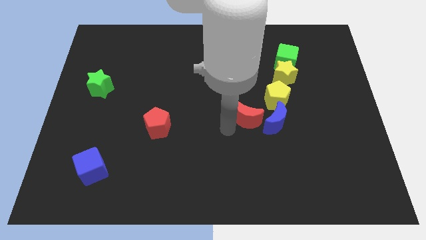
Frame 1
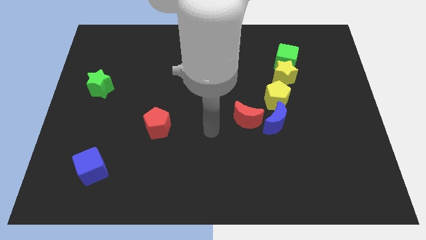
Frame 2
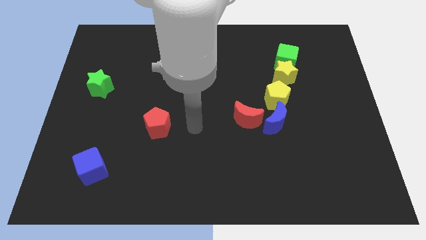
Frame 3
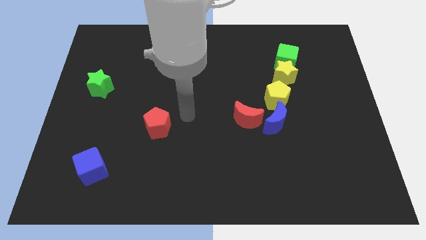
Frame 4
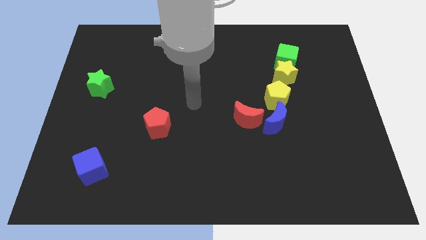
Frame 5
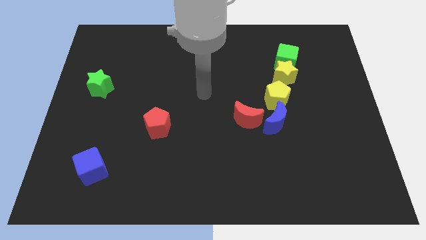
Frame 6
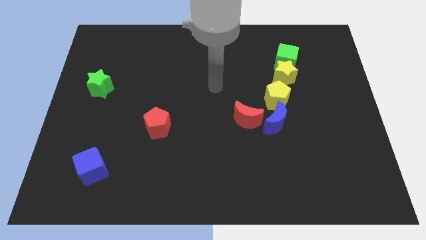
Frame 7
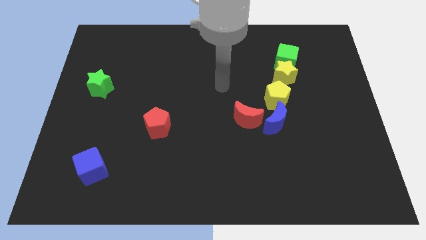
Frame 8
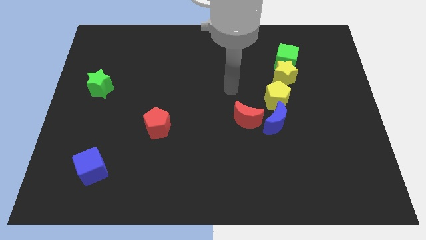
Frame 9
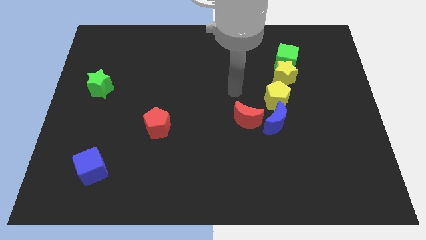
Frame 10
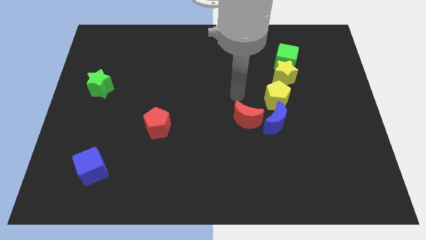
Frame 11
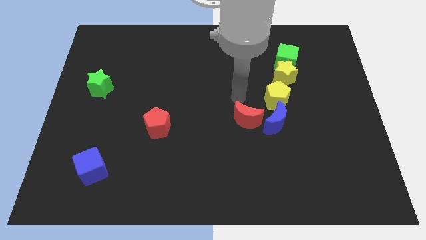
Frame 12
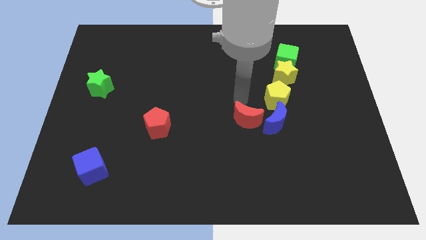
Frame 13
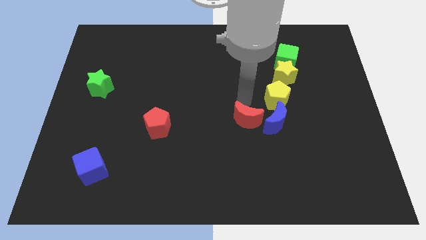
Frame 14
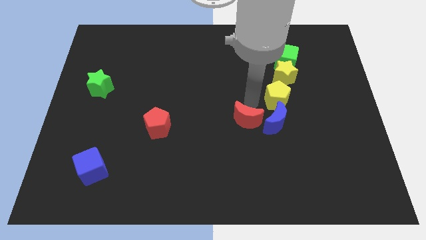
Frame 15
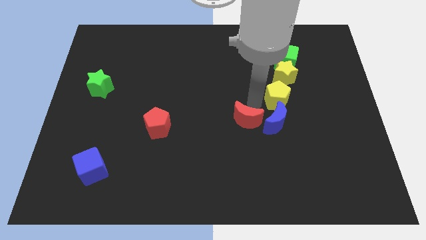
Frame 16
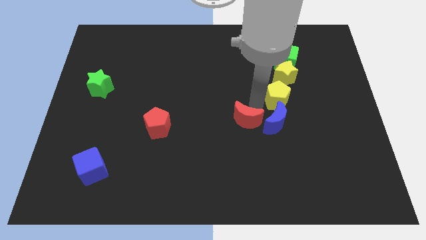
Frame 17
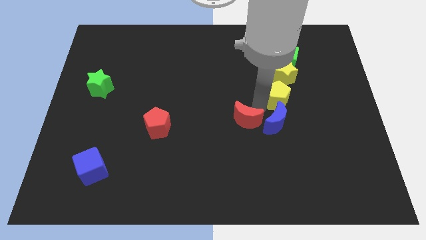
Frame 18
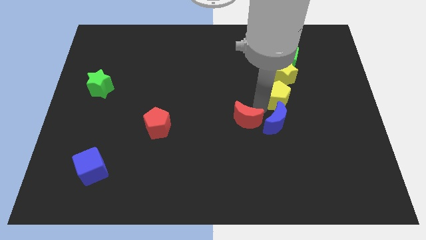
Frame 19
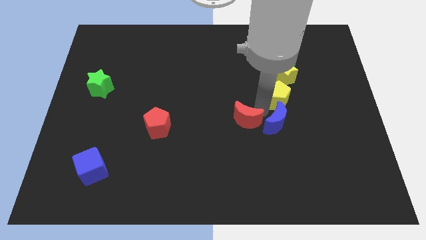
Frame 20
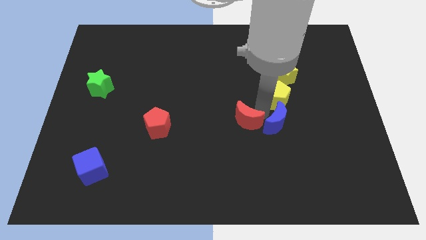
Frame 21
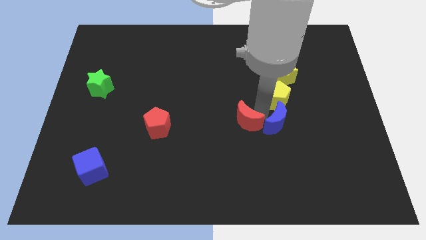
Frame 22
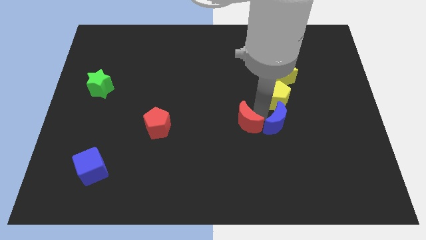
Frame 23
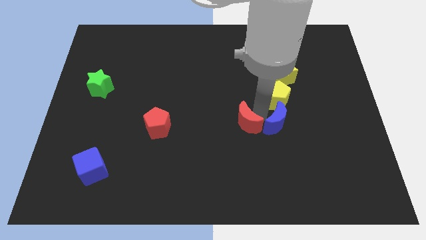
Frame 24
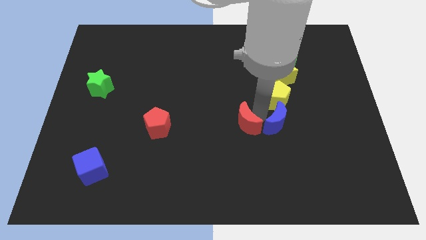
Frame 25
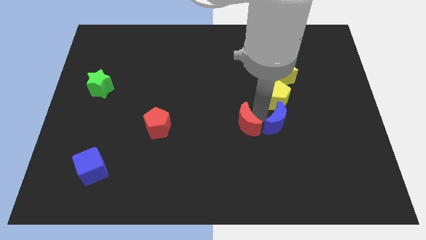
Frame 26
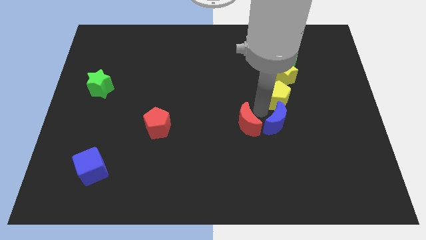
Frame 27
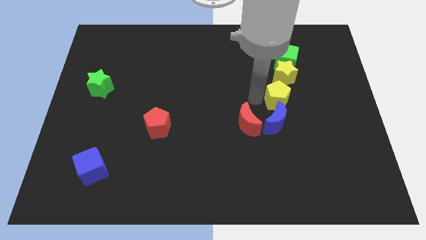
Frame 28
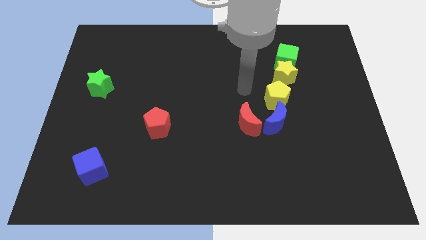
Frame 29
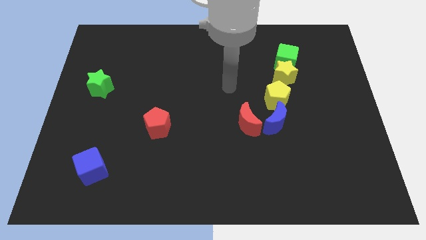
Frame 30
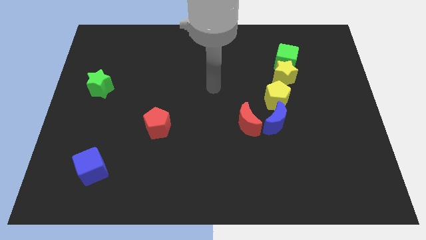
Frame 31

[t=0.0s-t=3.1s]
slightly move the red crescent to the down

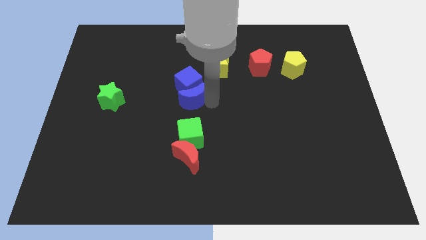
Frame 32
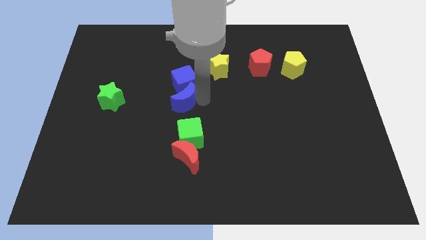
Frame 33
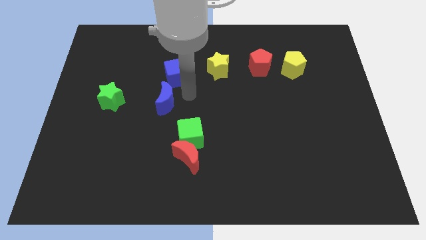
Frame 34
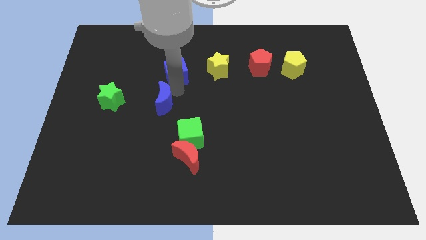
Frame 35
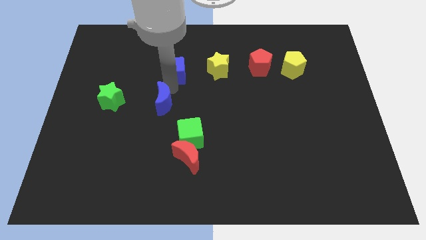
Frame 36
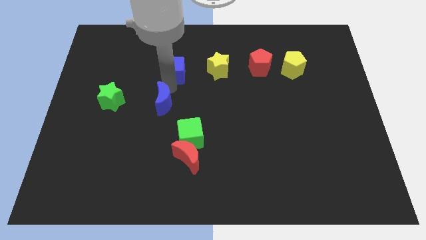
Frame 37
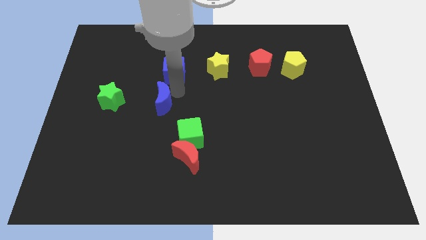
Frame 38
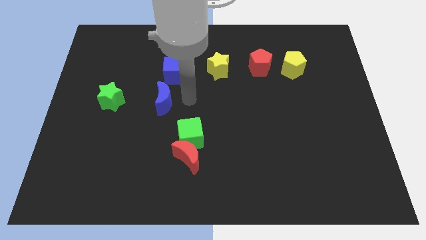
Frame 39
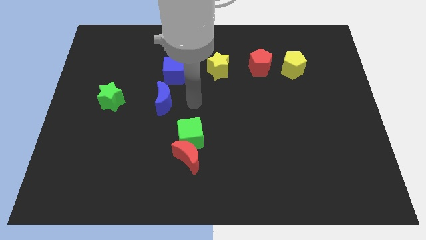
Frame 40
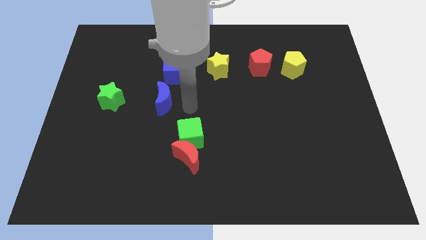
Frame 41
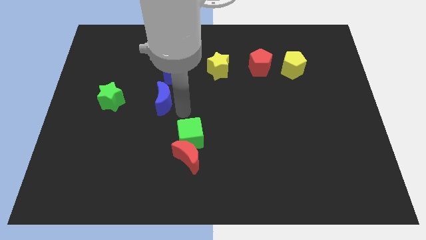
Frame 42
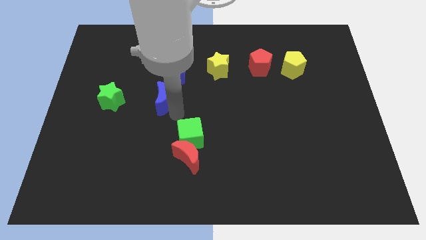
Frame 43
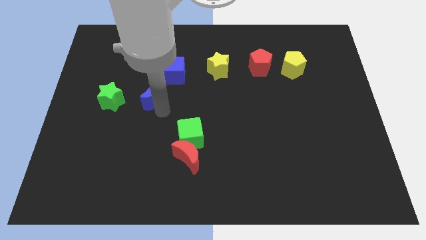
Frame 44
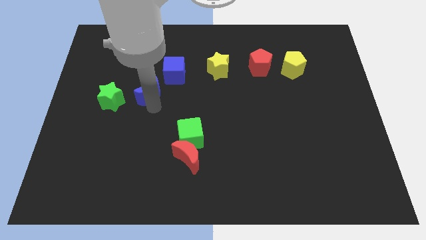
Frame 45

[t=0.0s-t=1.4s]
separate the blue moon from the blue cube

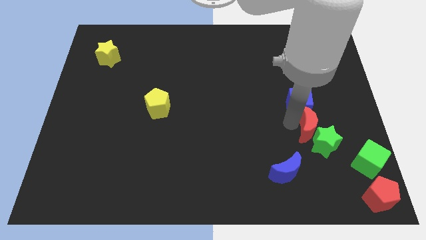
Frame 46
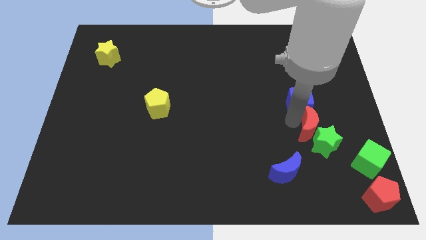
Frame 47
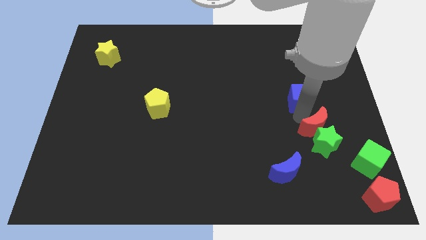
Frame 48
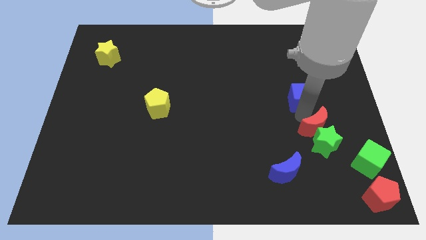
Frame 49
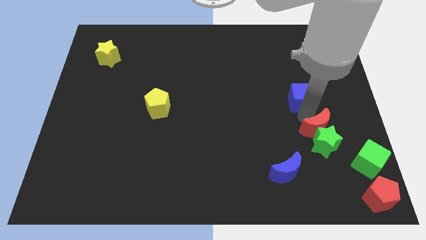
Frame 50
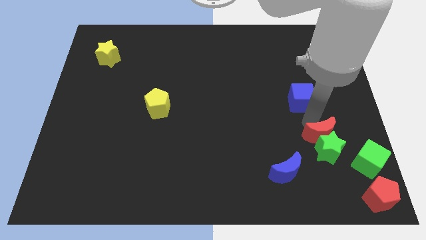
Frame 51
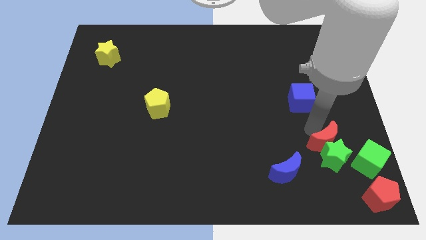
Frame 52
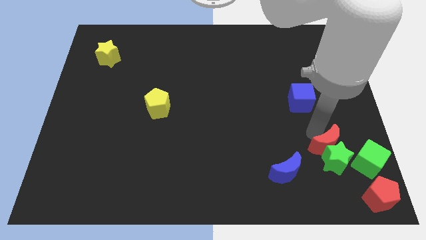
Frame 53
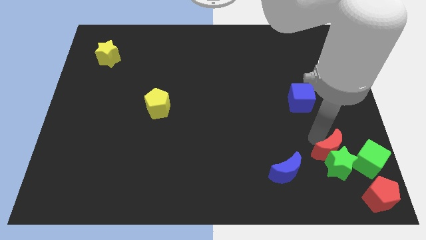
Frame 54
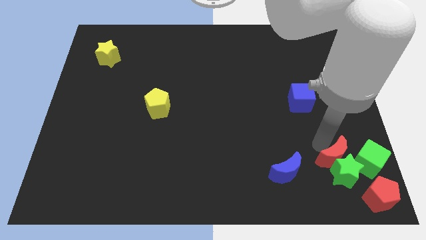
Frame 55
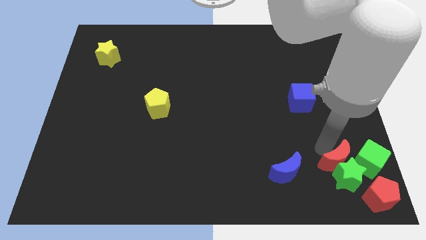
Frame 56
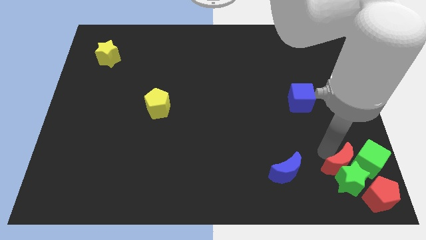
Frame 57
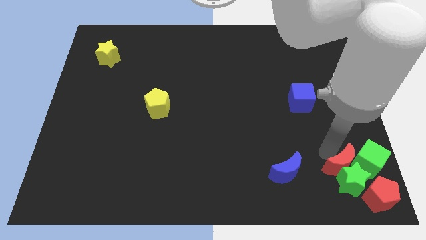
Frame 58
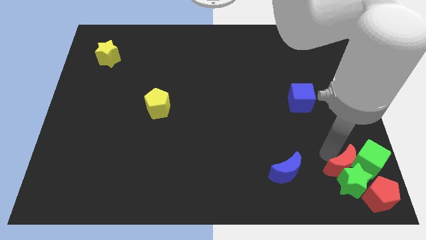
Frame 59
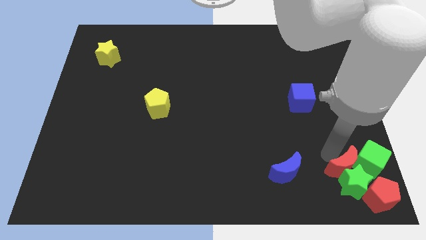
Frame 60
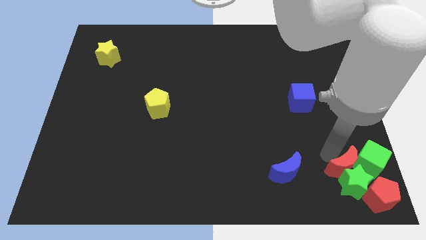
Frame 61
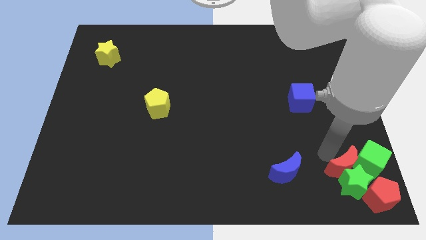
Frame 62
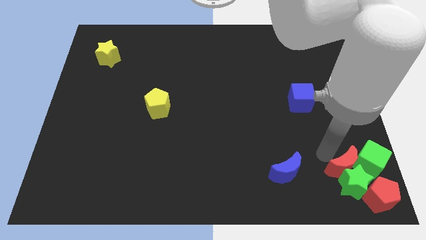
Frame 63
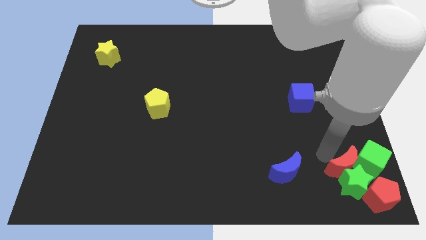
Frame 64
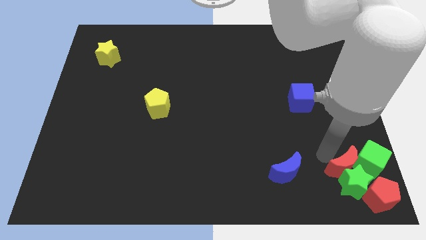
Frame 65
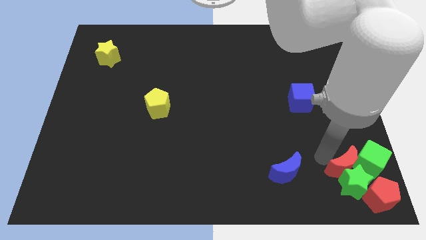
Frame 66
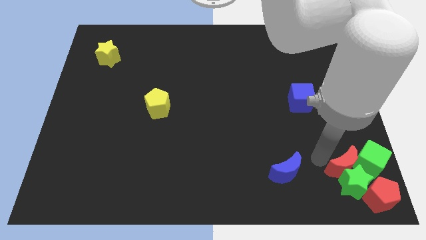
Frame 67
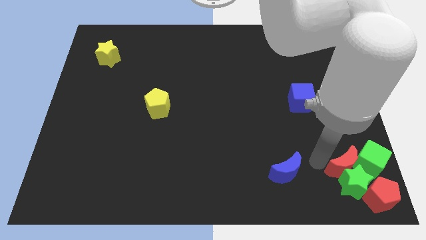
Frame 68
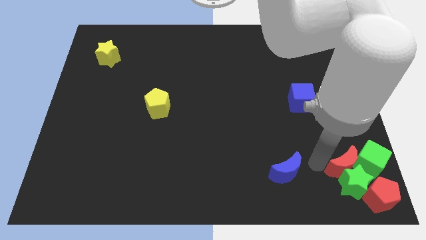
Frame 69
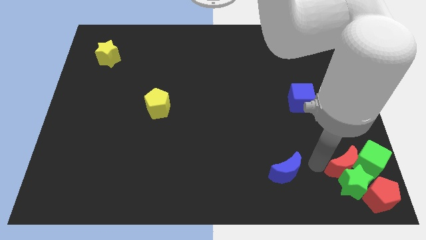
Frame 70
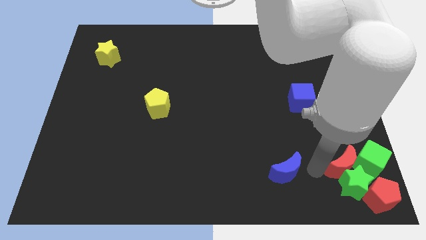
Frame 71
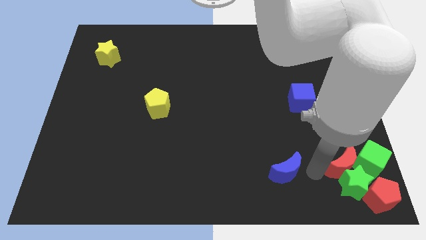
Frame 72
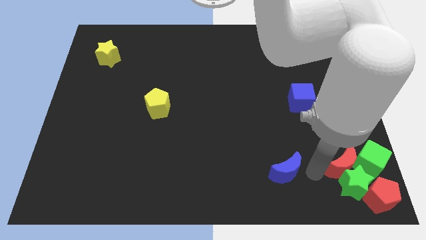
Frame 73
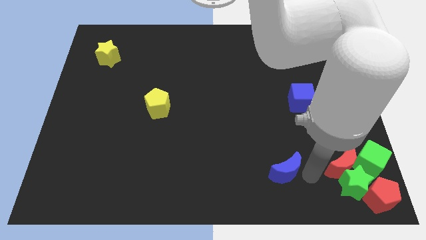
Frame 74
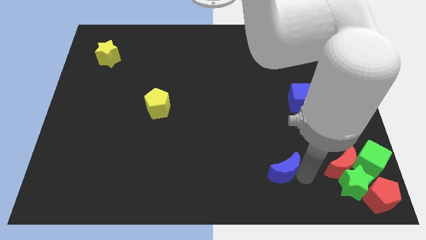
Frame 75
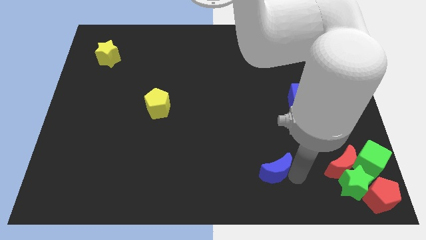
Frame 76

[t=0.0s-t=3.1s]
push the green star with the red crescent into the red pentagon and green cube

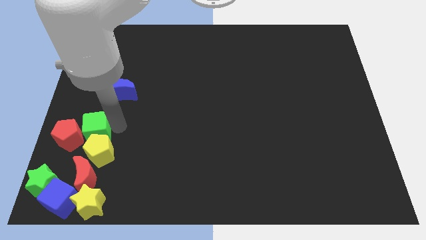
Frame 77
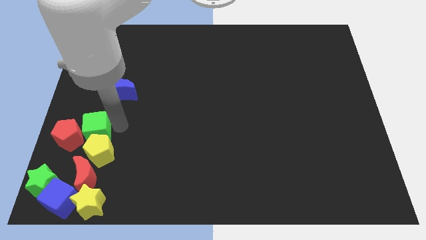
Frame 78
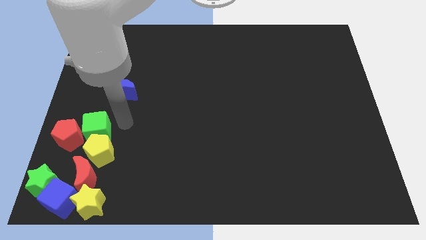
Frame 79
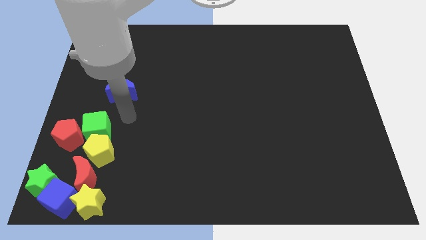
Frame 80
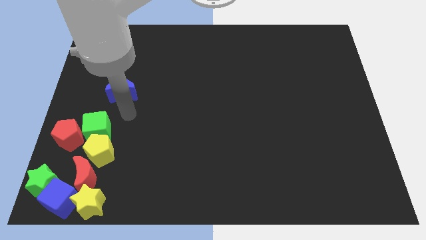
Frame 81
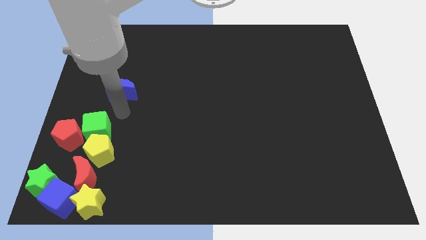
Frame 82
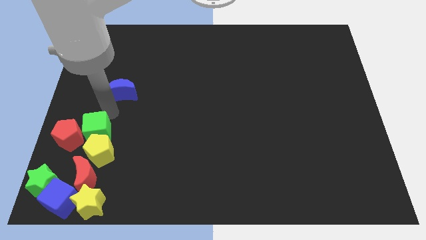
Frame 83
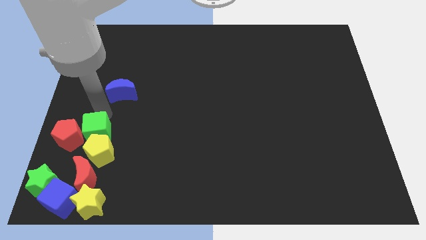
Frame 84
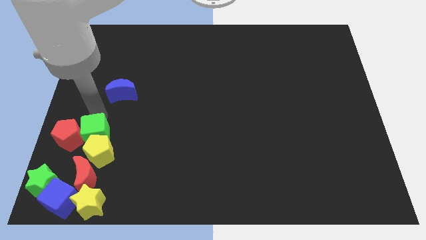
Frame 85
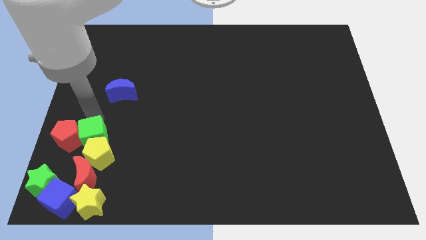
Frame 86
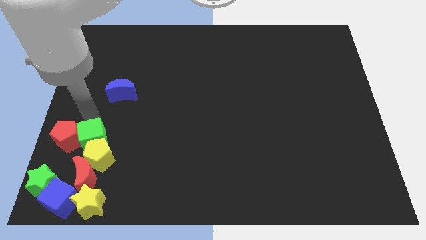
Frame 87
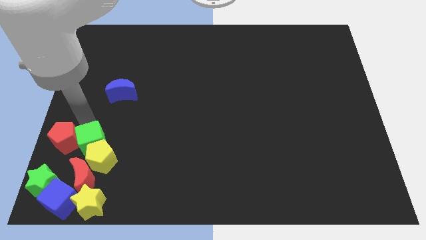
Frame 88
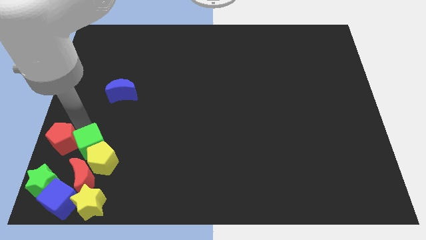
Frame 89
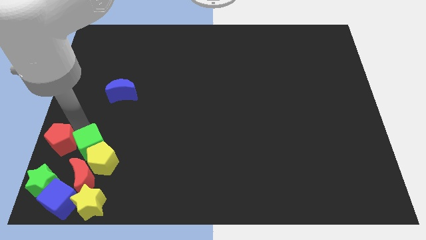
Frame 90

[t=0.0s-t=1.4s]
push green cube slightly down
